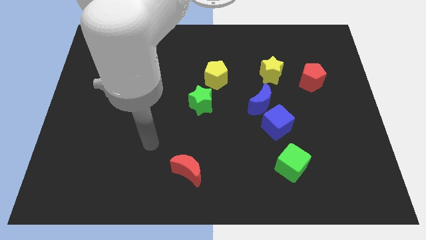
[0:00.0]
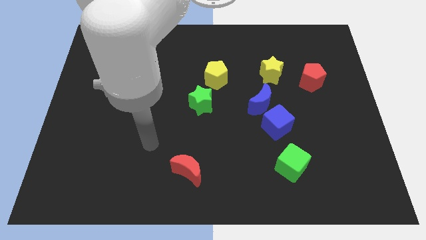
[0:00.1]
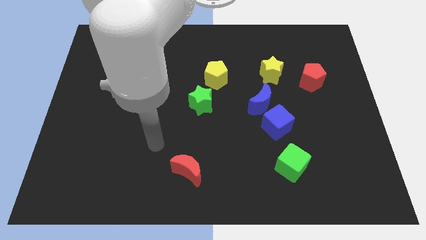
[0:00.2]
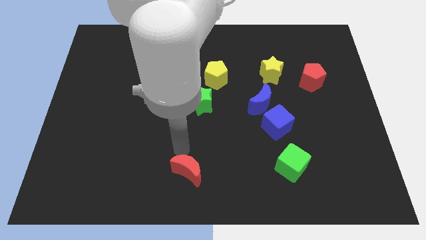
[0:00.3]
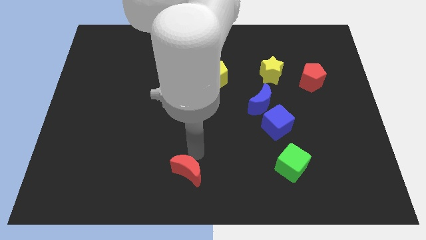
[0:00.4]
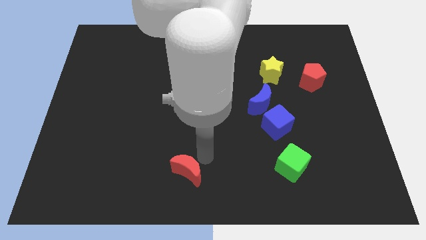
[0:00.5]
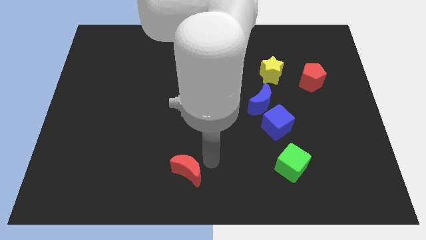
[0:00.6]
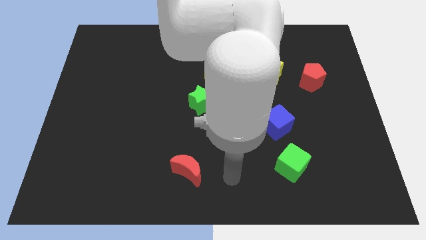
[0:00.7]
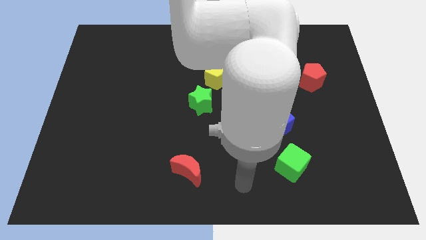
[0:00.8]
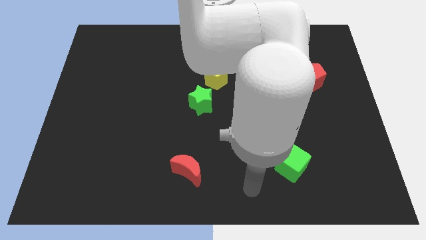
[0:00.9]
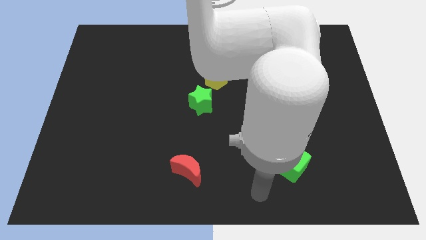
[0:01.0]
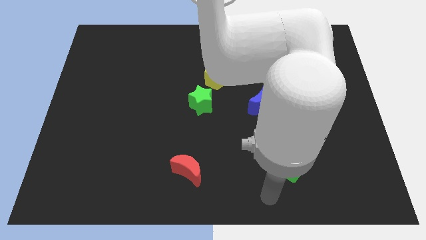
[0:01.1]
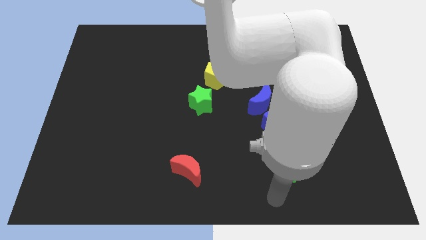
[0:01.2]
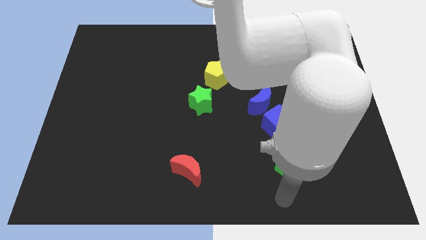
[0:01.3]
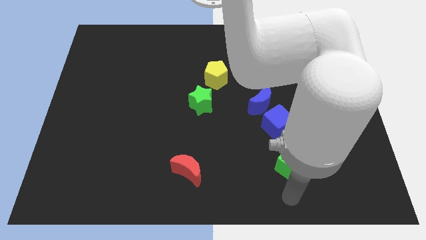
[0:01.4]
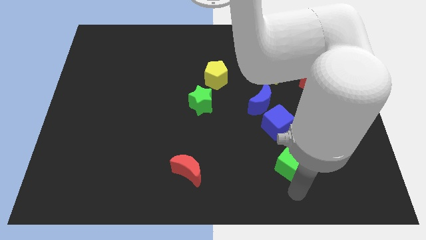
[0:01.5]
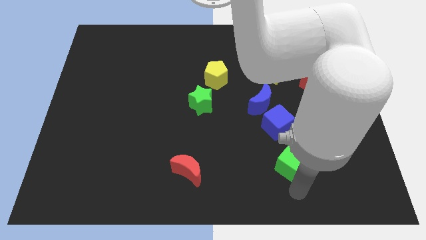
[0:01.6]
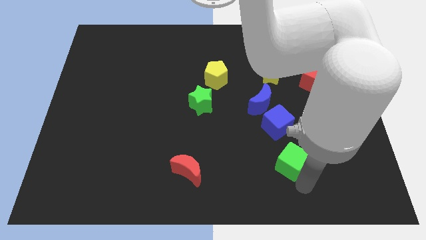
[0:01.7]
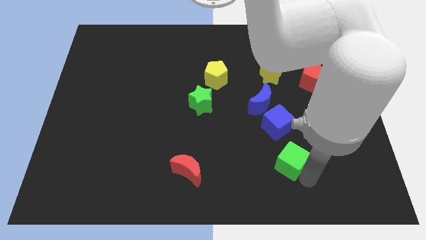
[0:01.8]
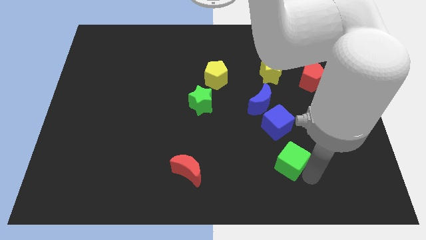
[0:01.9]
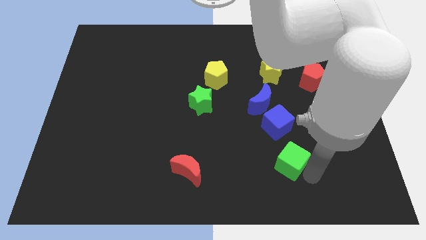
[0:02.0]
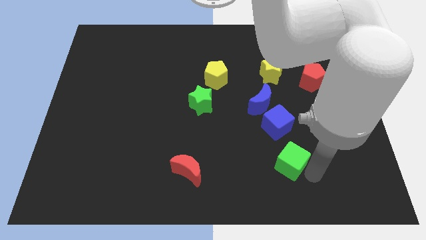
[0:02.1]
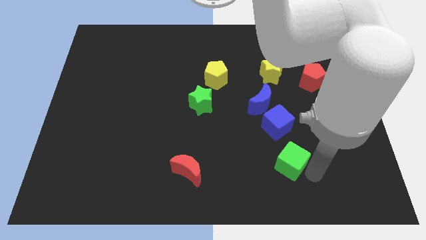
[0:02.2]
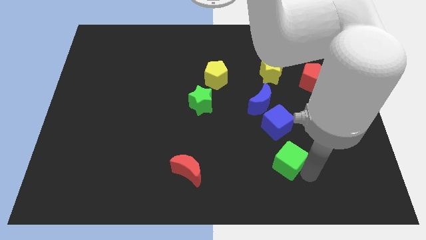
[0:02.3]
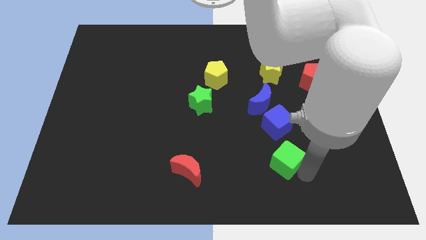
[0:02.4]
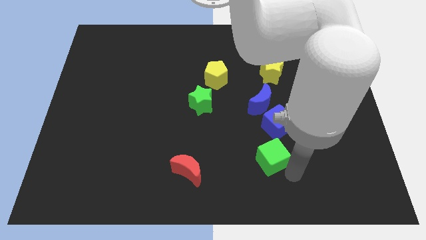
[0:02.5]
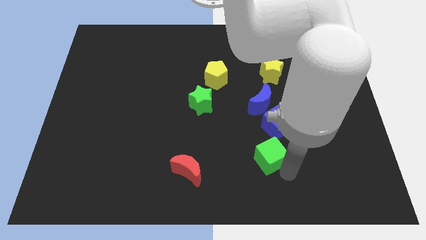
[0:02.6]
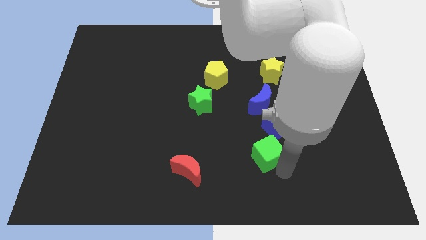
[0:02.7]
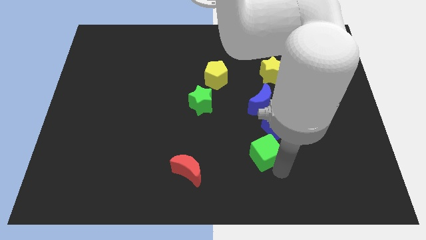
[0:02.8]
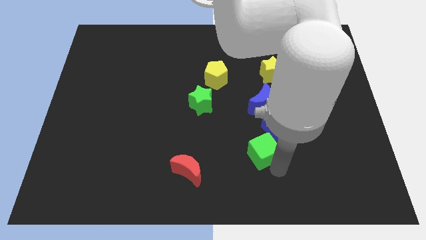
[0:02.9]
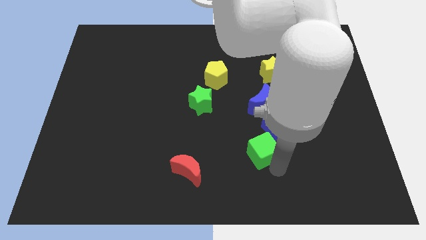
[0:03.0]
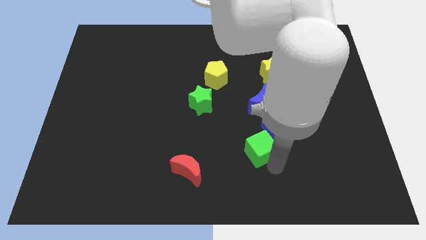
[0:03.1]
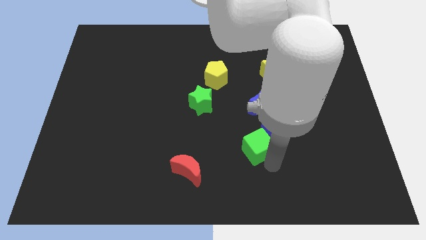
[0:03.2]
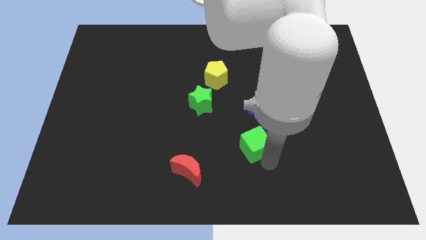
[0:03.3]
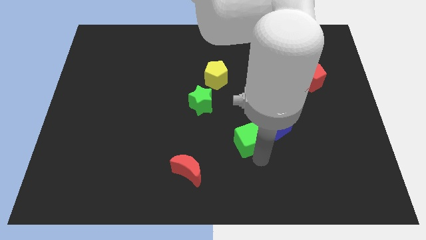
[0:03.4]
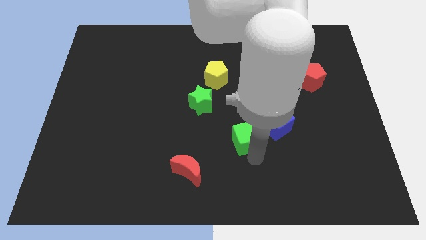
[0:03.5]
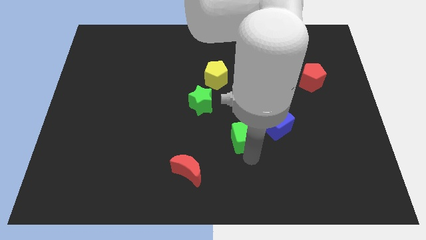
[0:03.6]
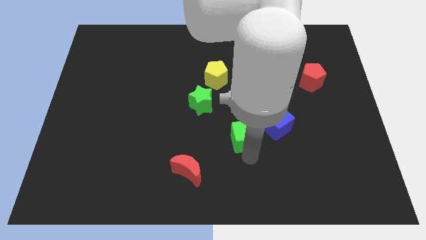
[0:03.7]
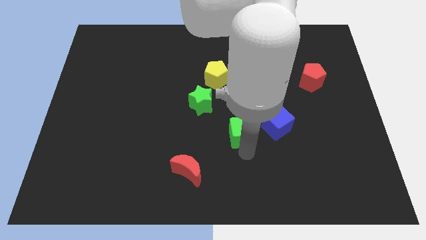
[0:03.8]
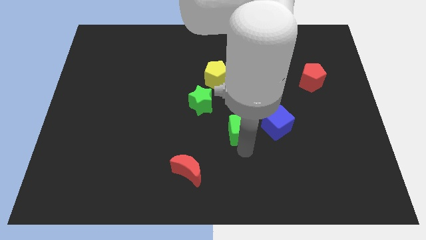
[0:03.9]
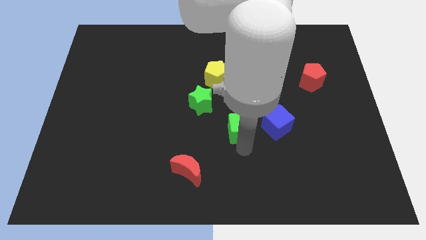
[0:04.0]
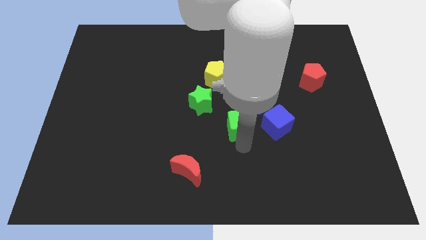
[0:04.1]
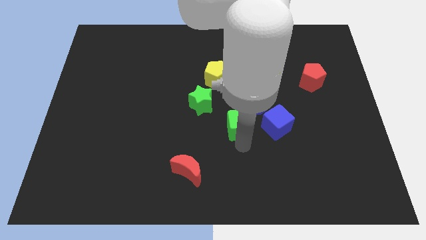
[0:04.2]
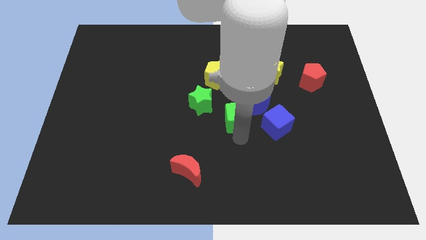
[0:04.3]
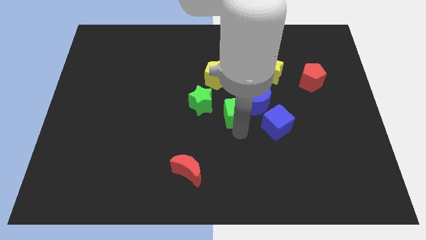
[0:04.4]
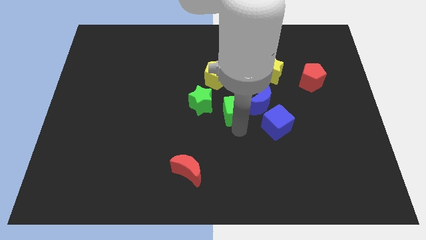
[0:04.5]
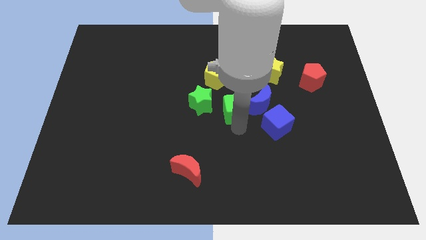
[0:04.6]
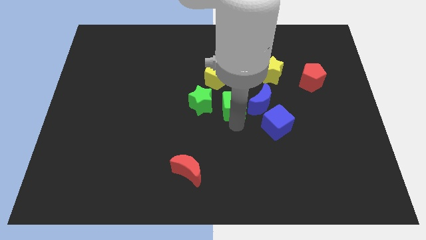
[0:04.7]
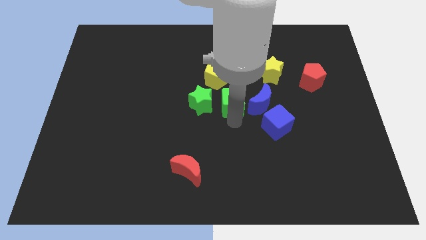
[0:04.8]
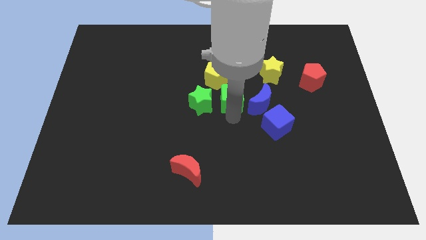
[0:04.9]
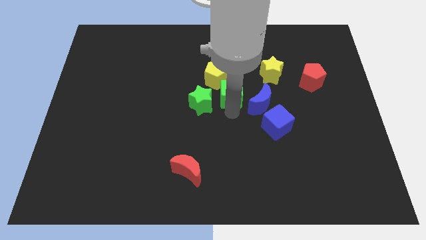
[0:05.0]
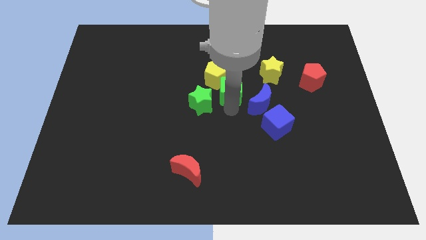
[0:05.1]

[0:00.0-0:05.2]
move the green cube close to the yellow pentagon

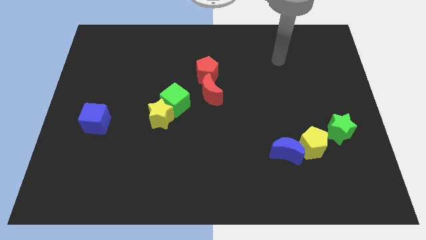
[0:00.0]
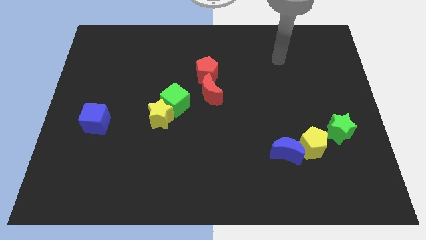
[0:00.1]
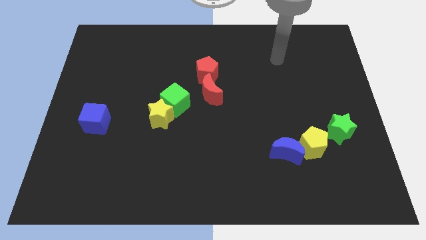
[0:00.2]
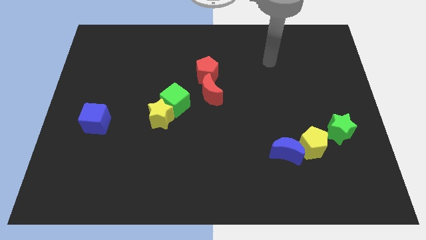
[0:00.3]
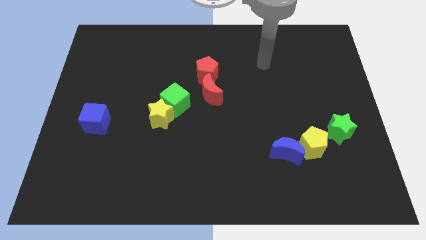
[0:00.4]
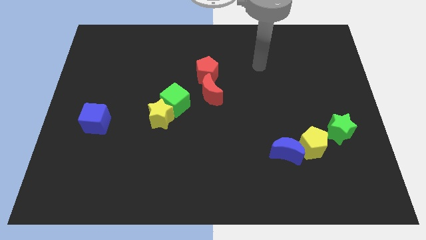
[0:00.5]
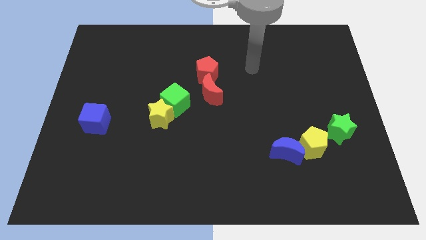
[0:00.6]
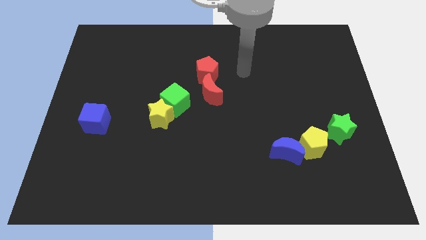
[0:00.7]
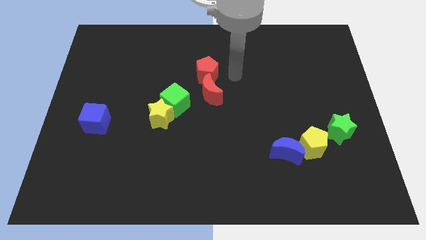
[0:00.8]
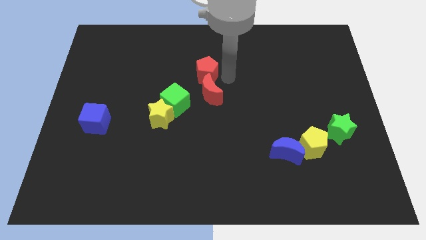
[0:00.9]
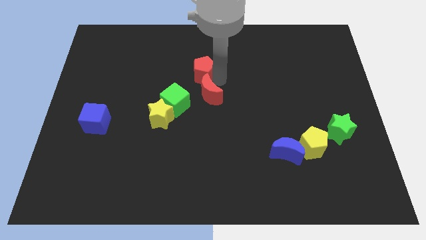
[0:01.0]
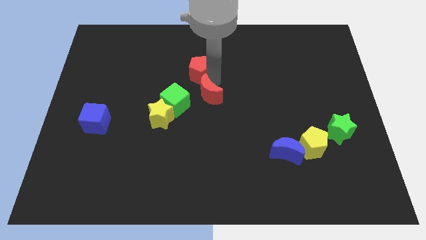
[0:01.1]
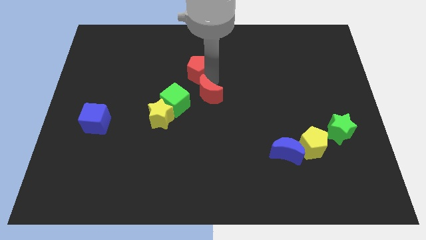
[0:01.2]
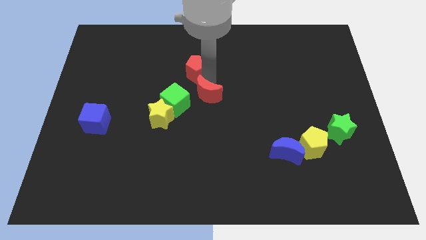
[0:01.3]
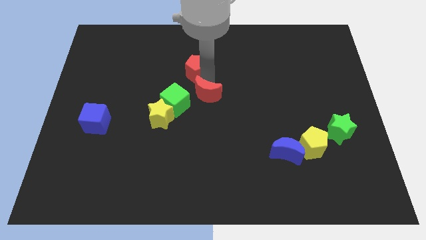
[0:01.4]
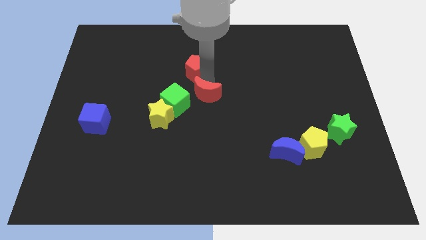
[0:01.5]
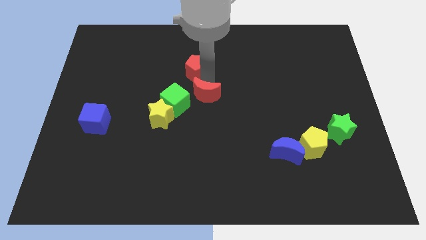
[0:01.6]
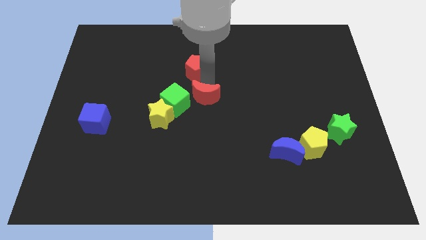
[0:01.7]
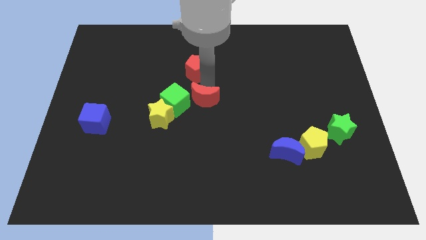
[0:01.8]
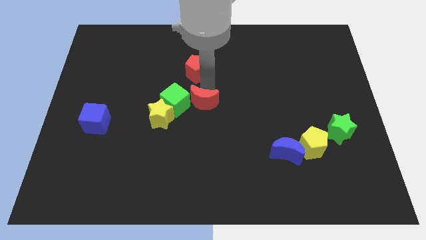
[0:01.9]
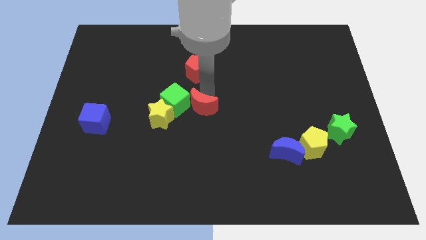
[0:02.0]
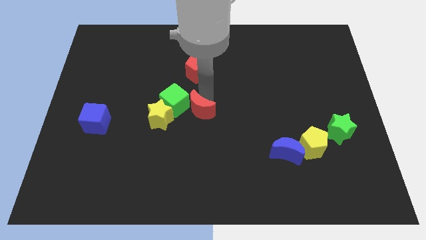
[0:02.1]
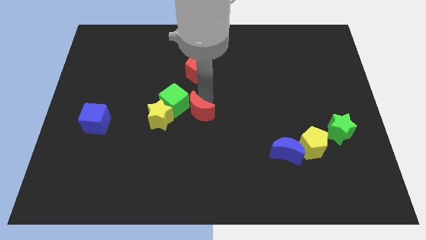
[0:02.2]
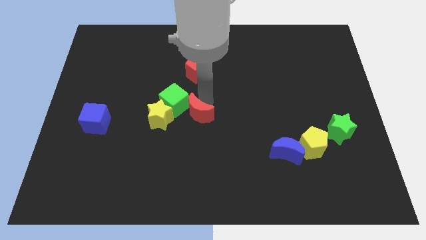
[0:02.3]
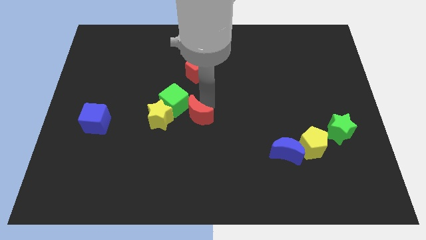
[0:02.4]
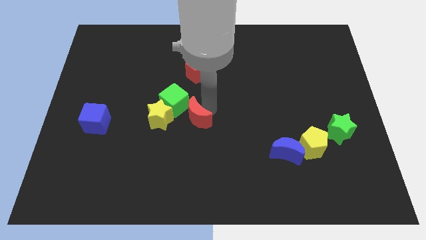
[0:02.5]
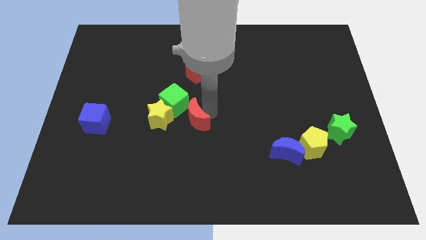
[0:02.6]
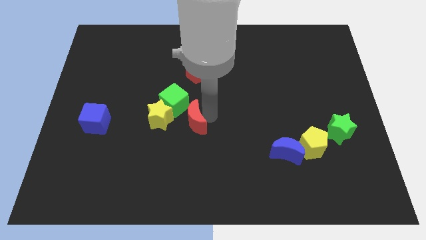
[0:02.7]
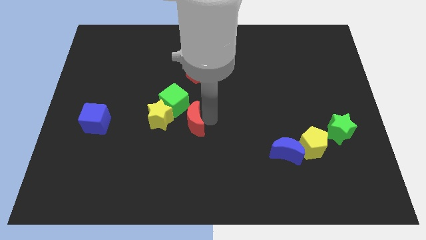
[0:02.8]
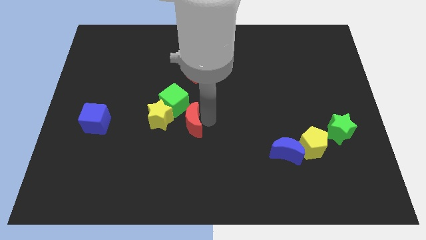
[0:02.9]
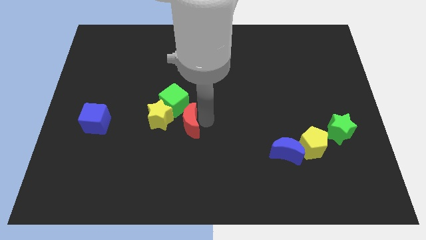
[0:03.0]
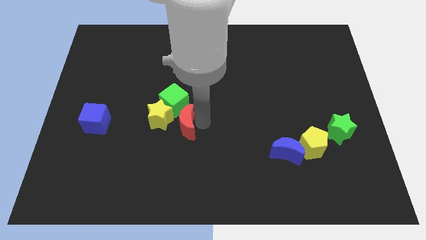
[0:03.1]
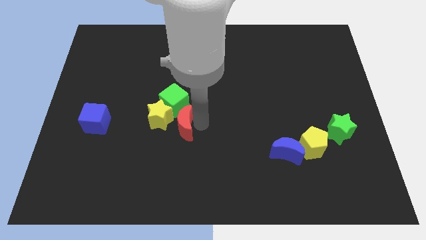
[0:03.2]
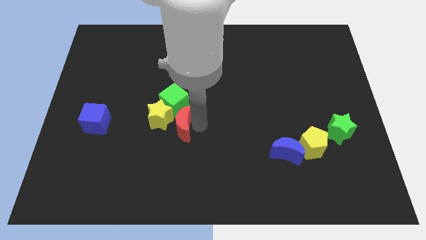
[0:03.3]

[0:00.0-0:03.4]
slide the red moon to the yellow star
